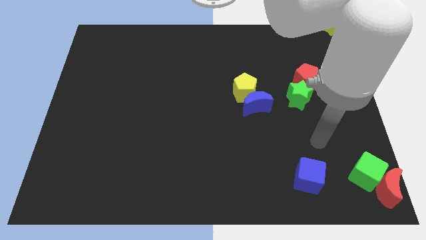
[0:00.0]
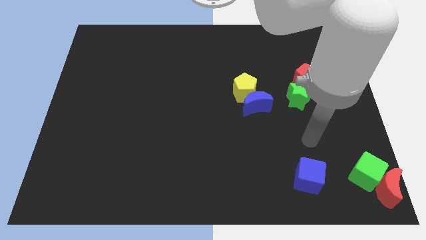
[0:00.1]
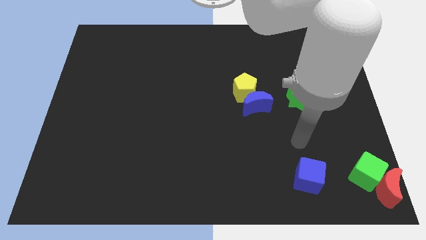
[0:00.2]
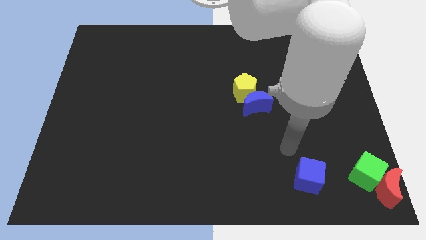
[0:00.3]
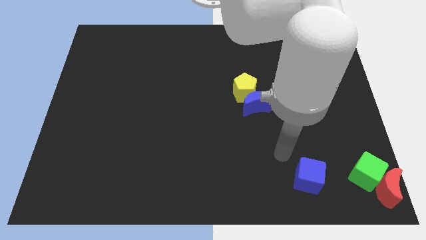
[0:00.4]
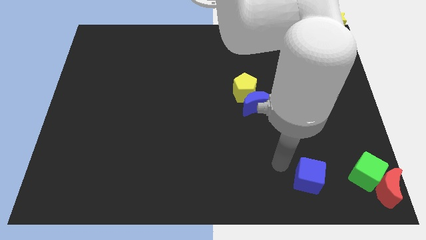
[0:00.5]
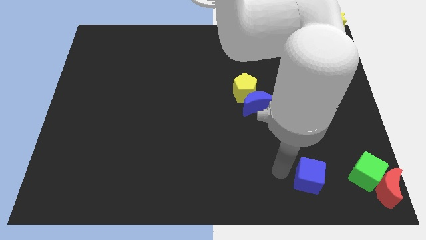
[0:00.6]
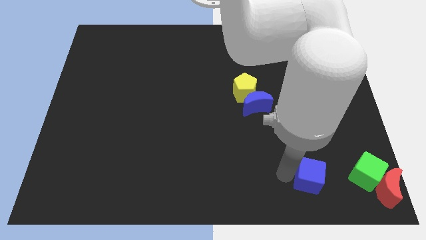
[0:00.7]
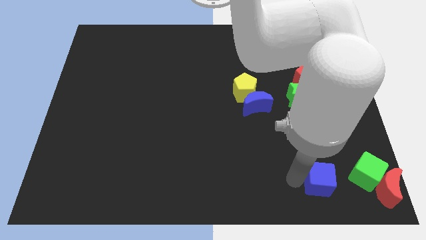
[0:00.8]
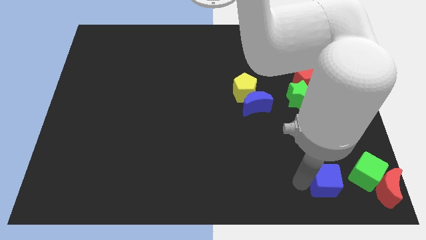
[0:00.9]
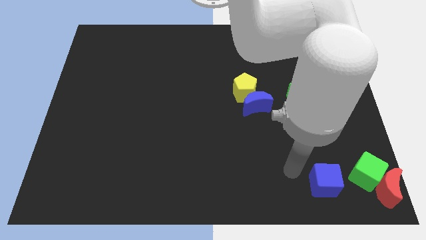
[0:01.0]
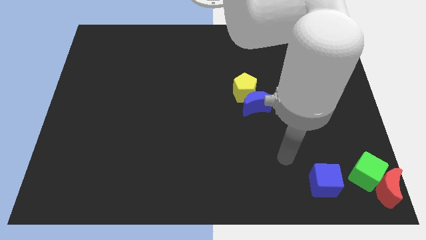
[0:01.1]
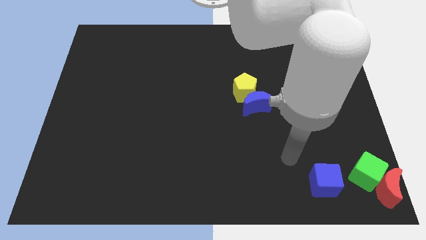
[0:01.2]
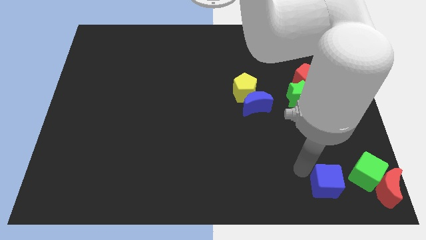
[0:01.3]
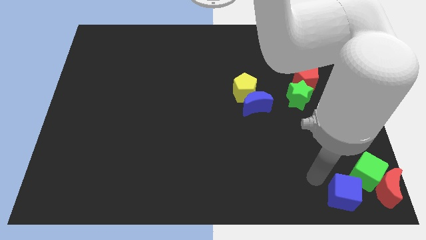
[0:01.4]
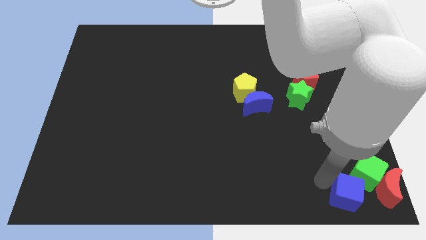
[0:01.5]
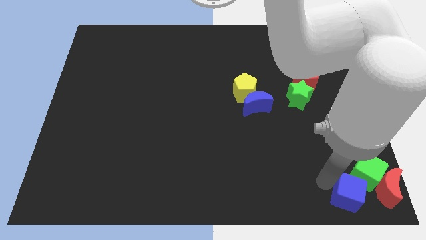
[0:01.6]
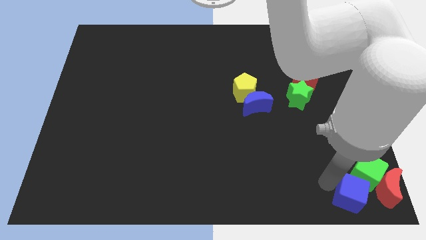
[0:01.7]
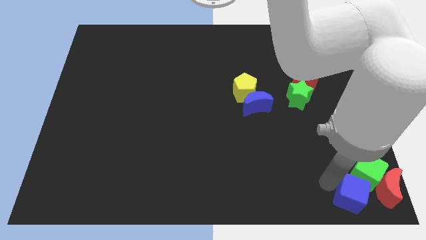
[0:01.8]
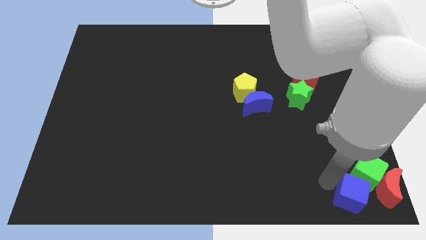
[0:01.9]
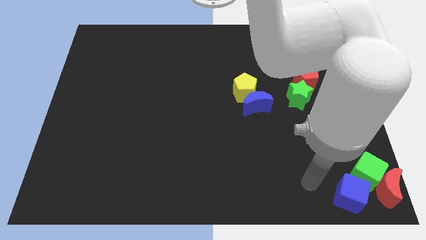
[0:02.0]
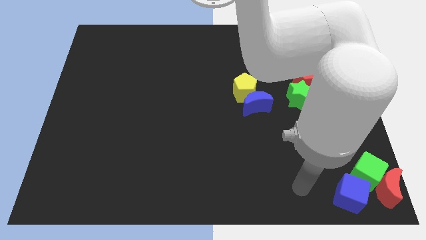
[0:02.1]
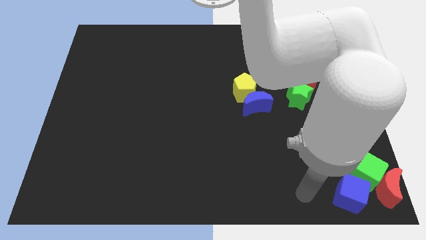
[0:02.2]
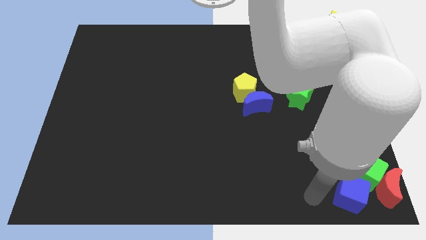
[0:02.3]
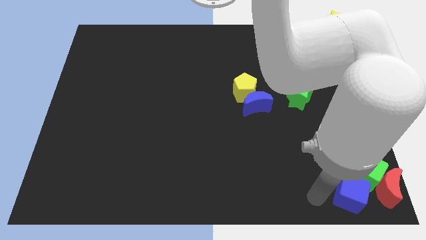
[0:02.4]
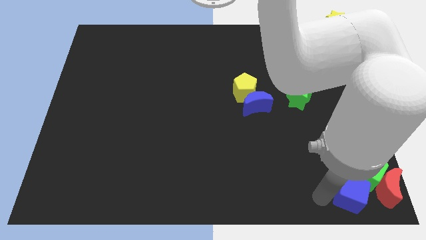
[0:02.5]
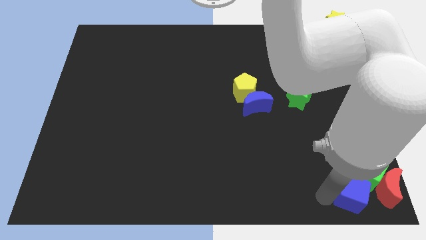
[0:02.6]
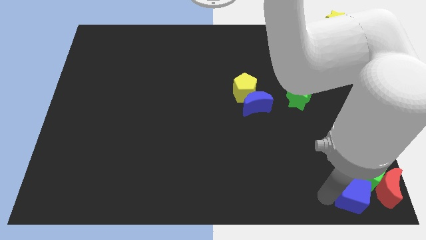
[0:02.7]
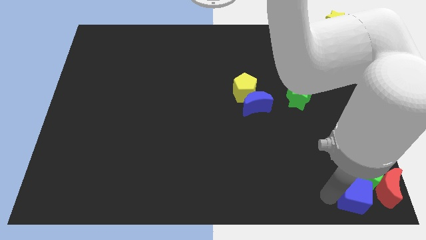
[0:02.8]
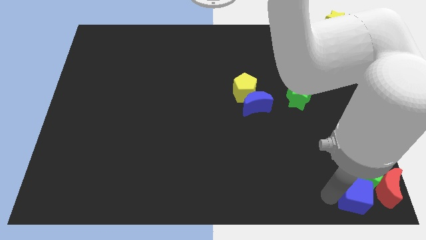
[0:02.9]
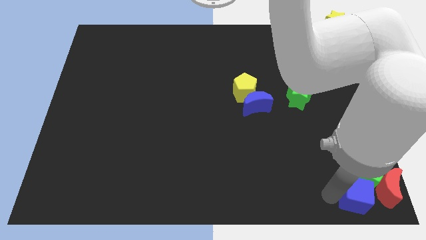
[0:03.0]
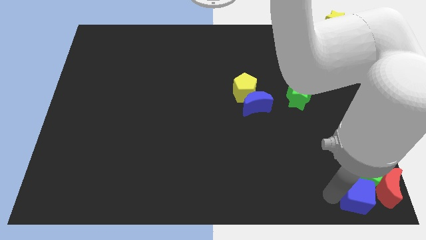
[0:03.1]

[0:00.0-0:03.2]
place blue cube above green cube

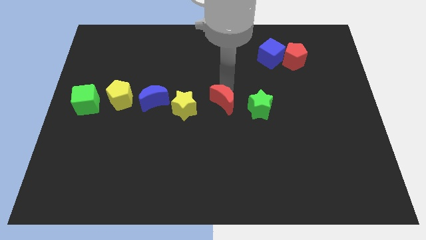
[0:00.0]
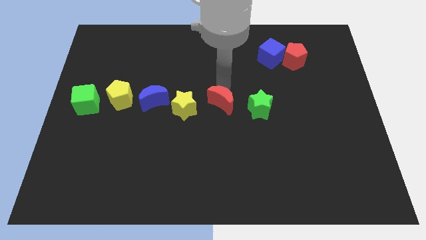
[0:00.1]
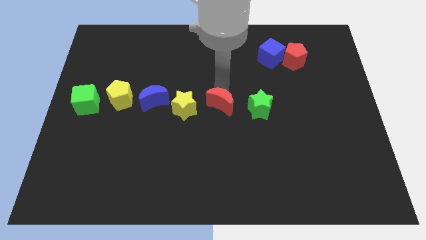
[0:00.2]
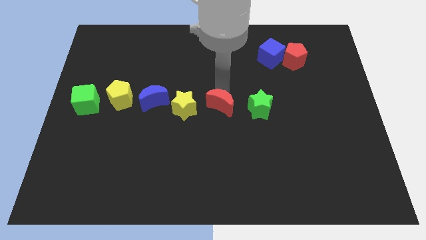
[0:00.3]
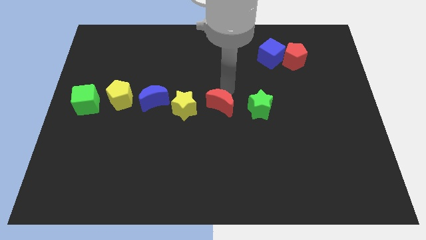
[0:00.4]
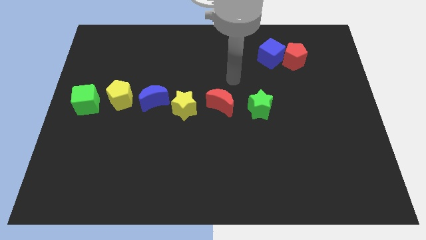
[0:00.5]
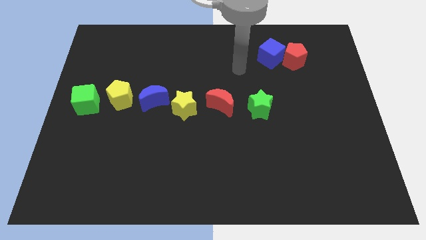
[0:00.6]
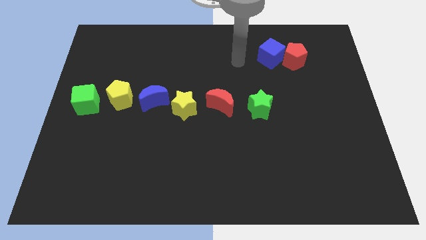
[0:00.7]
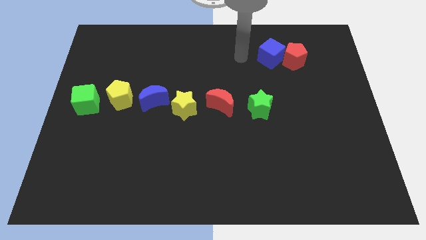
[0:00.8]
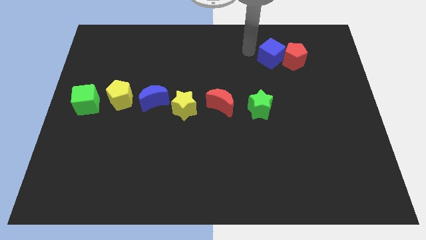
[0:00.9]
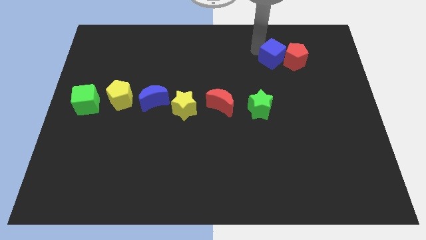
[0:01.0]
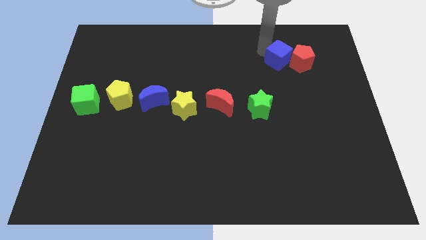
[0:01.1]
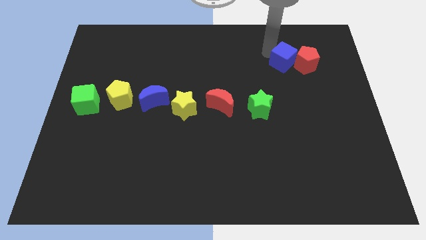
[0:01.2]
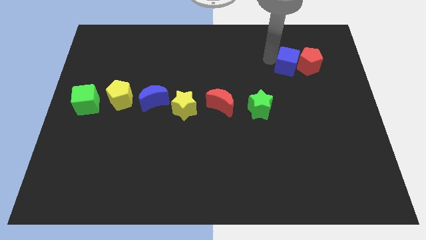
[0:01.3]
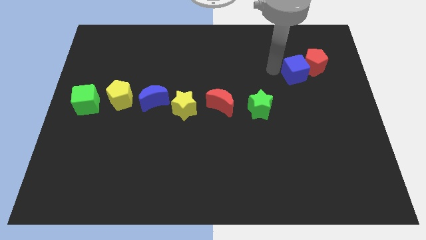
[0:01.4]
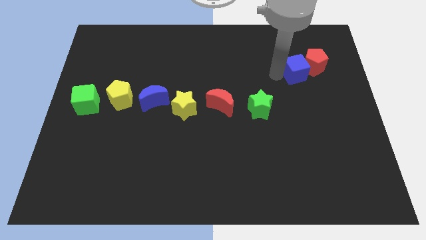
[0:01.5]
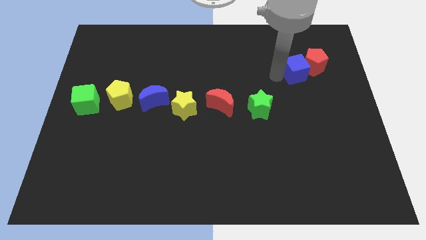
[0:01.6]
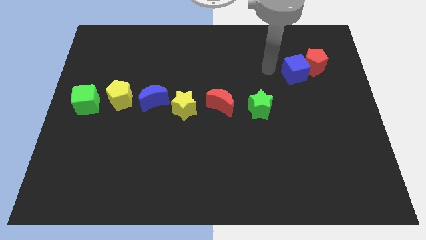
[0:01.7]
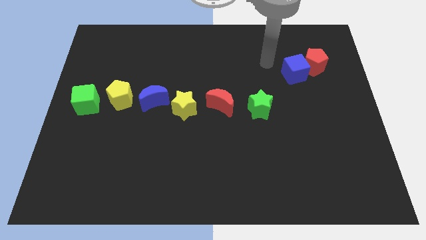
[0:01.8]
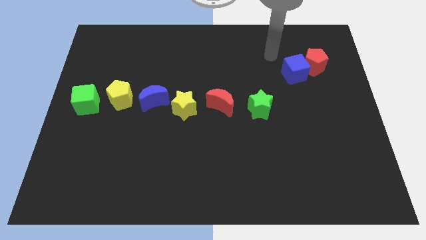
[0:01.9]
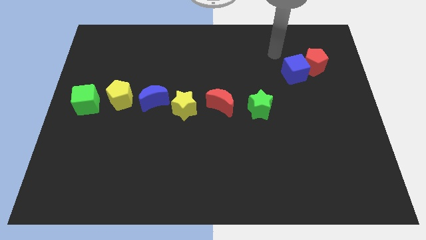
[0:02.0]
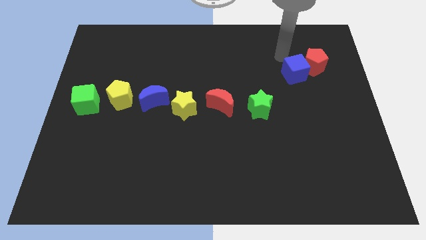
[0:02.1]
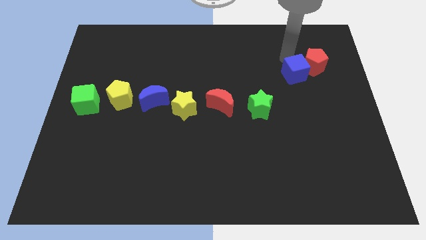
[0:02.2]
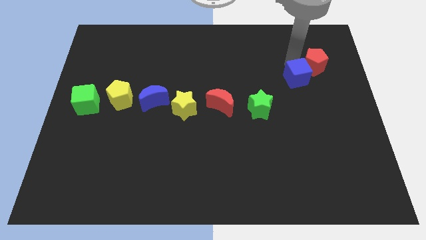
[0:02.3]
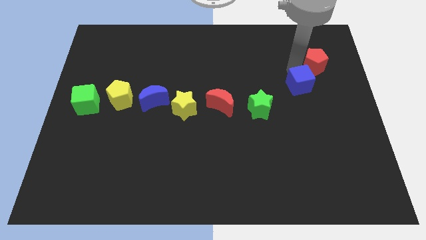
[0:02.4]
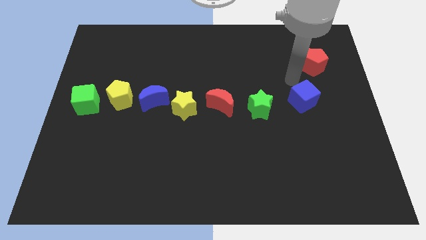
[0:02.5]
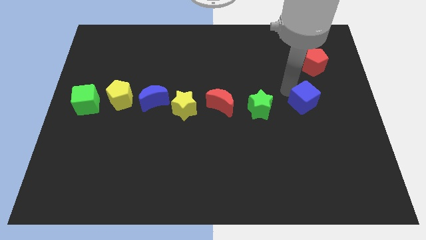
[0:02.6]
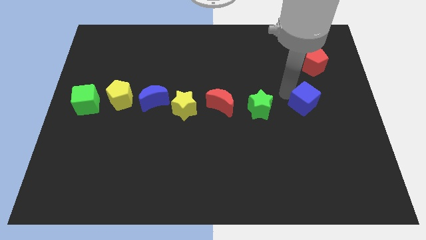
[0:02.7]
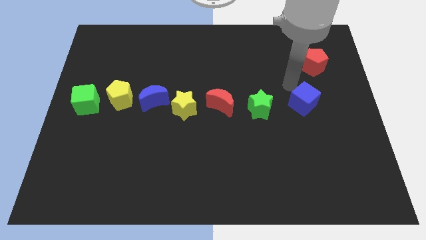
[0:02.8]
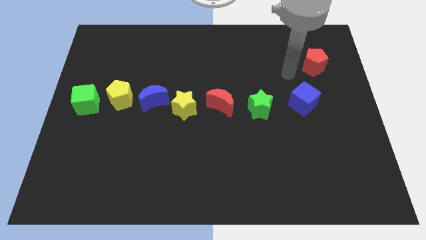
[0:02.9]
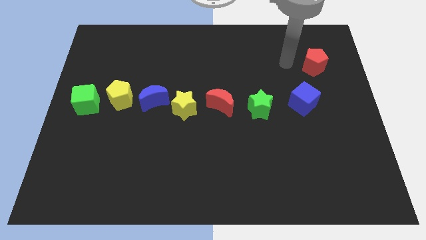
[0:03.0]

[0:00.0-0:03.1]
separate the red pentagon and blue cube

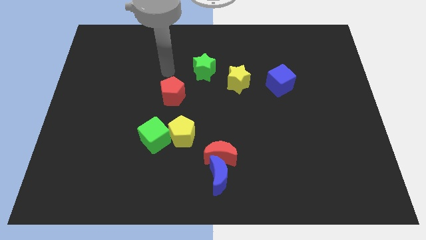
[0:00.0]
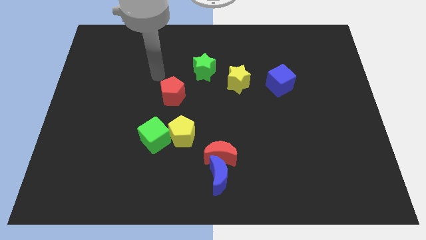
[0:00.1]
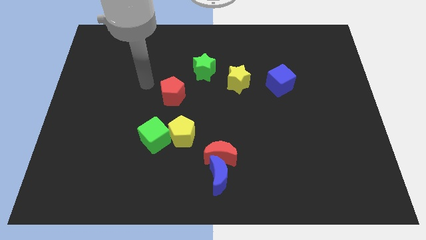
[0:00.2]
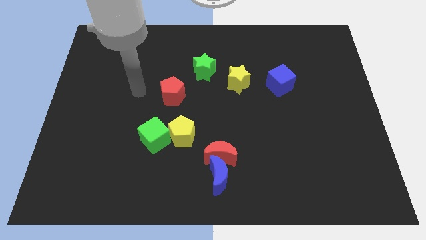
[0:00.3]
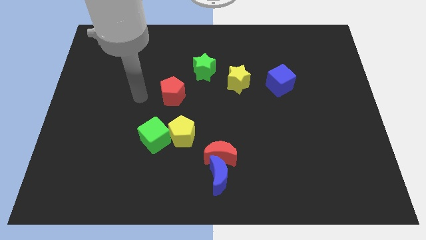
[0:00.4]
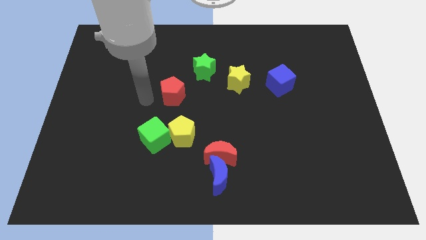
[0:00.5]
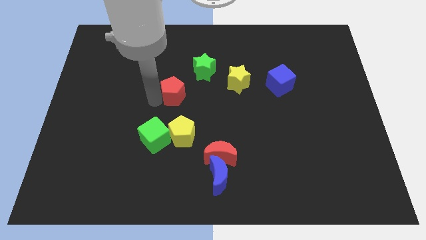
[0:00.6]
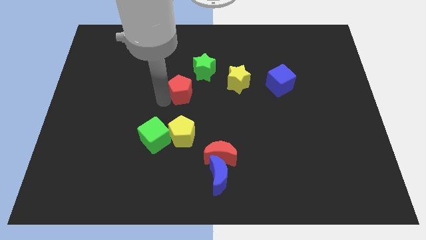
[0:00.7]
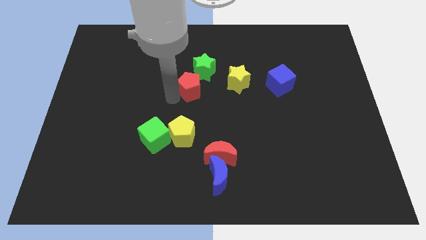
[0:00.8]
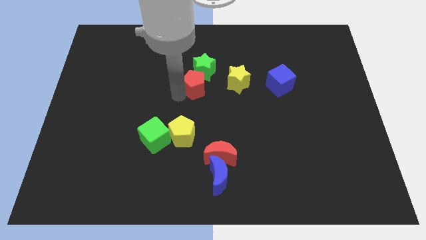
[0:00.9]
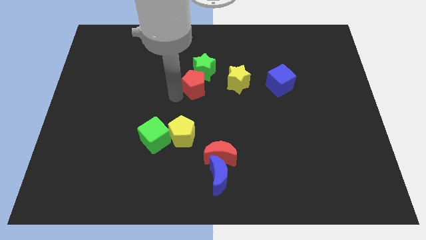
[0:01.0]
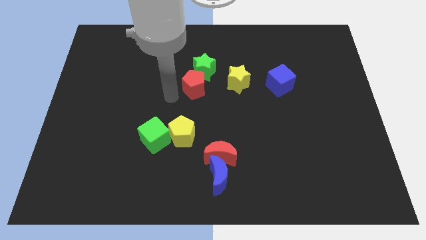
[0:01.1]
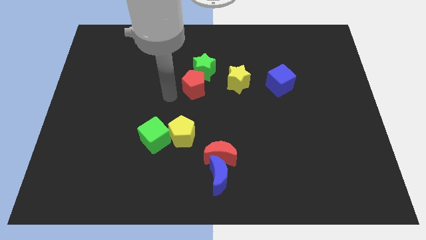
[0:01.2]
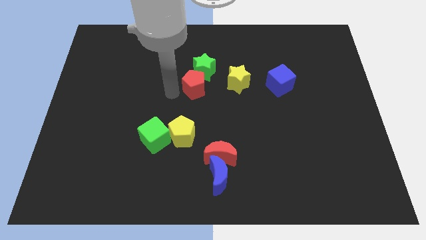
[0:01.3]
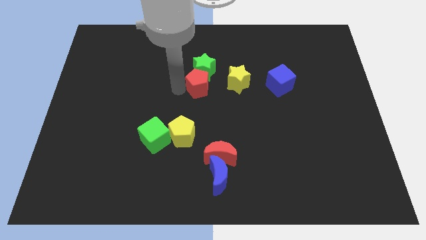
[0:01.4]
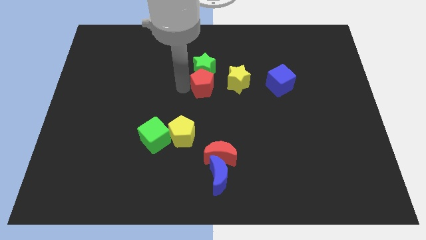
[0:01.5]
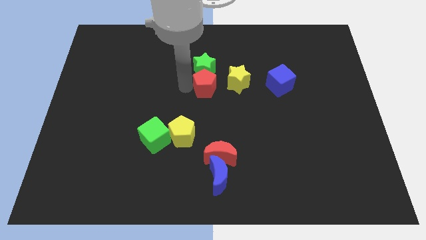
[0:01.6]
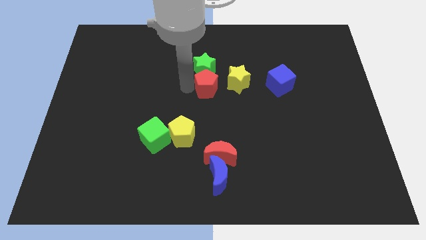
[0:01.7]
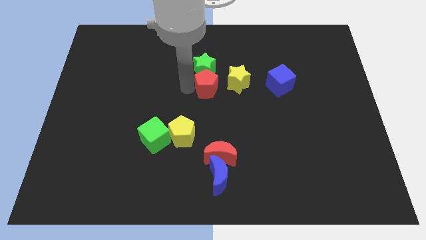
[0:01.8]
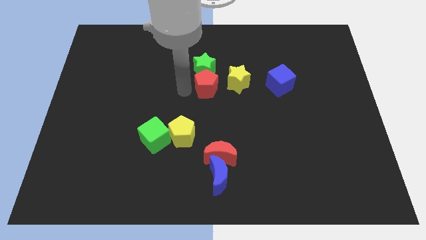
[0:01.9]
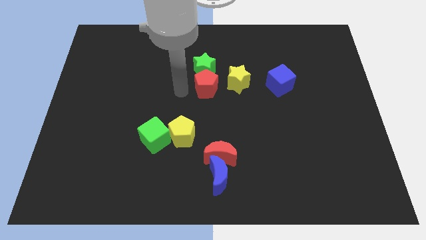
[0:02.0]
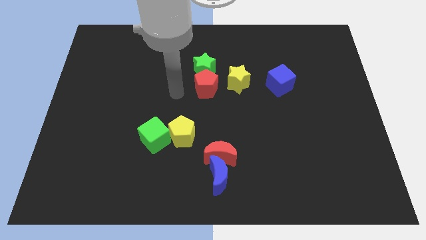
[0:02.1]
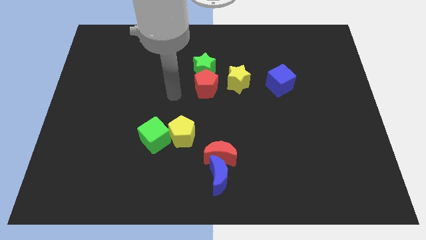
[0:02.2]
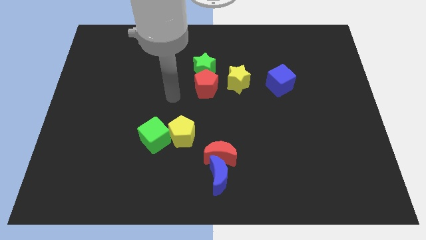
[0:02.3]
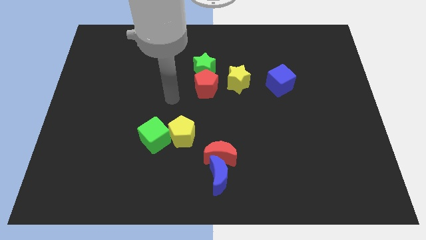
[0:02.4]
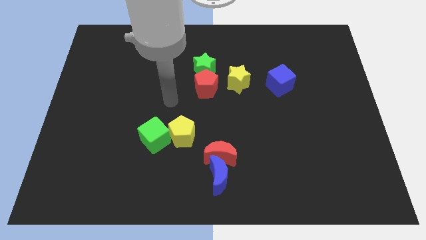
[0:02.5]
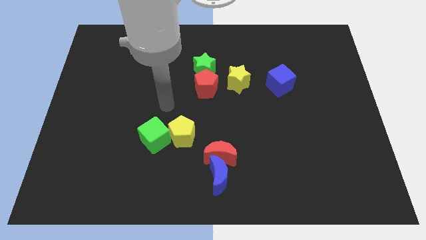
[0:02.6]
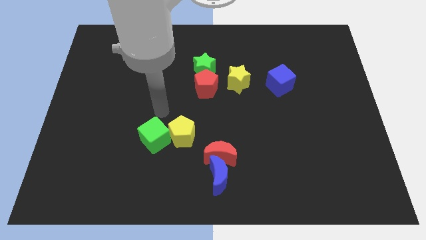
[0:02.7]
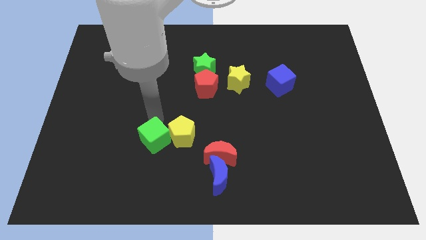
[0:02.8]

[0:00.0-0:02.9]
place the red pentagon below the green star
